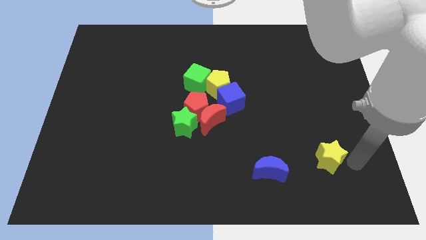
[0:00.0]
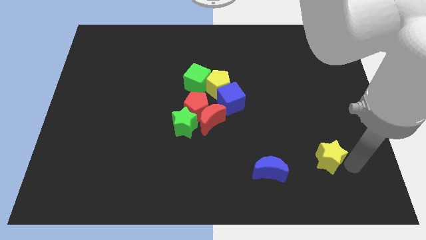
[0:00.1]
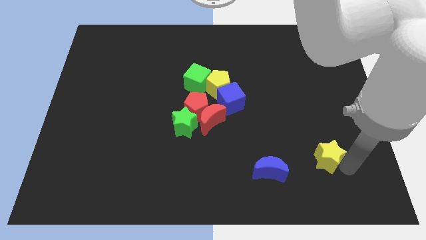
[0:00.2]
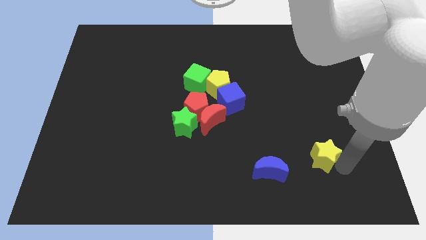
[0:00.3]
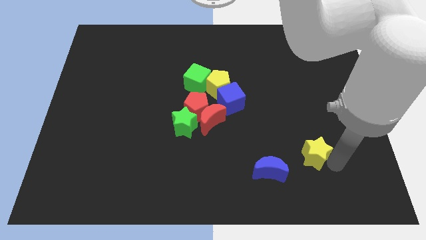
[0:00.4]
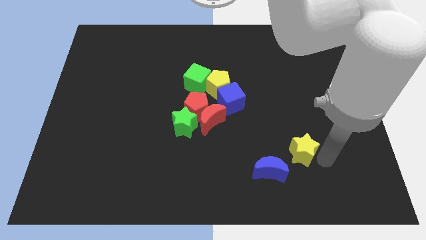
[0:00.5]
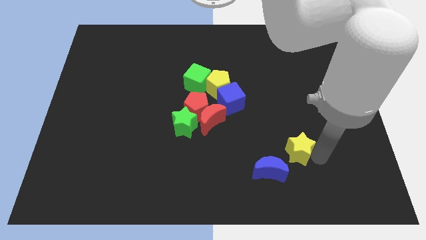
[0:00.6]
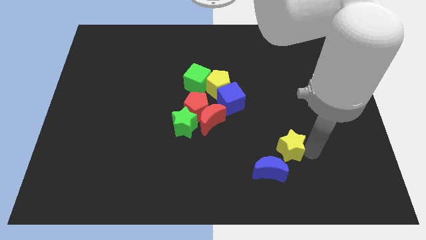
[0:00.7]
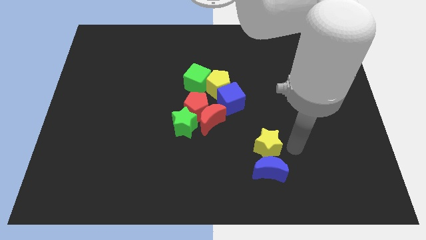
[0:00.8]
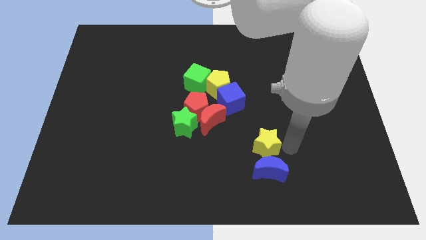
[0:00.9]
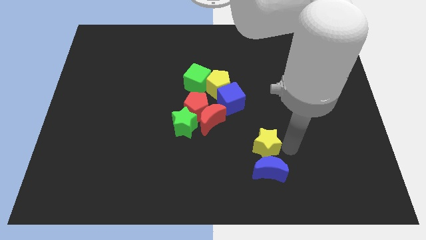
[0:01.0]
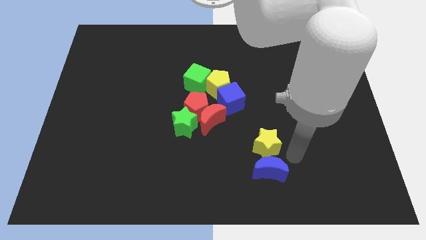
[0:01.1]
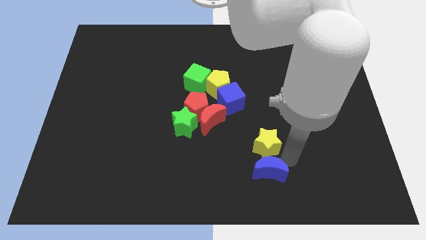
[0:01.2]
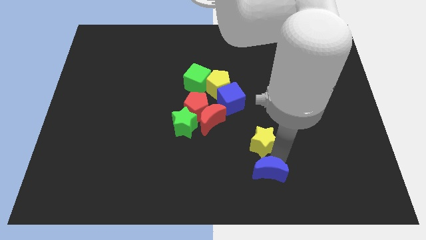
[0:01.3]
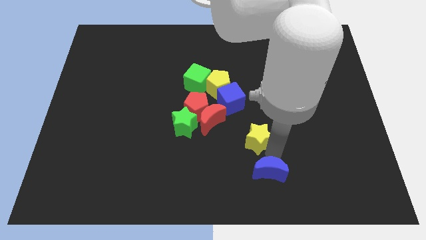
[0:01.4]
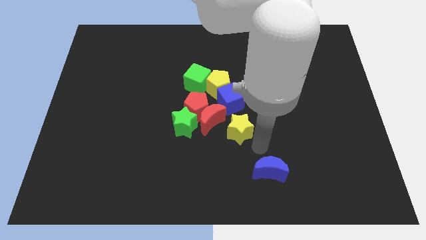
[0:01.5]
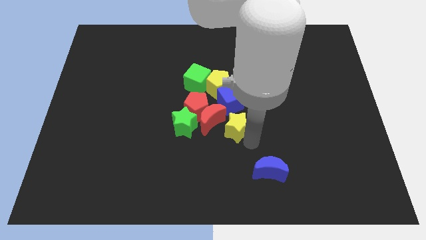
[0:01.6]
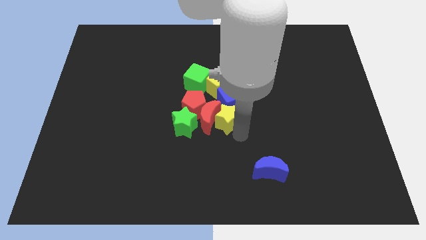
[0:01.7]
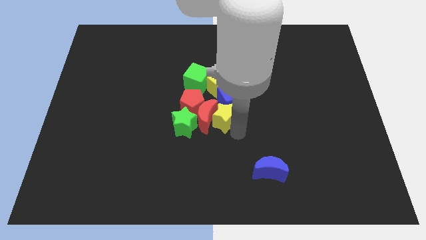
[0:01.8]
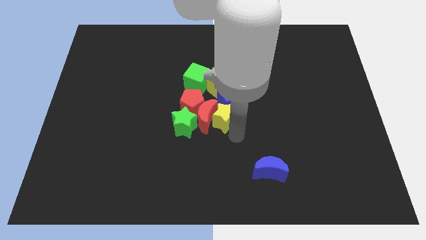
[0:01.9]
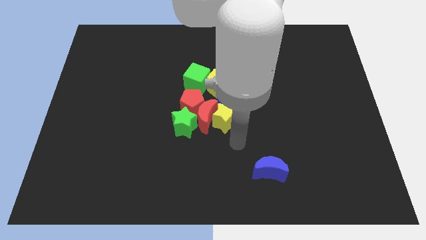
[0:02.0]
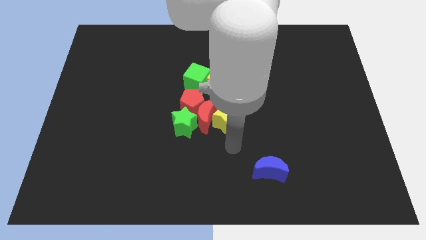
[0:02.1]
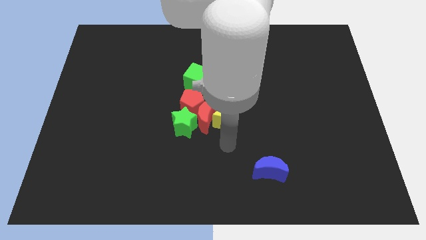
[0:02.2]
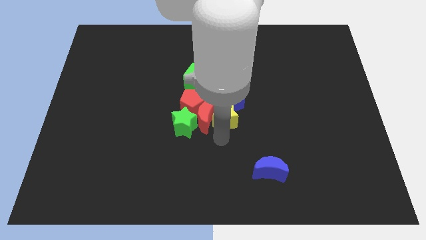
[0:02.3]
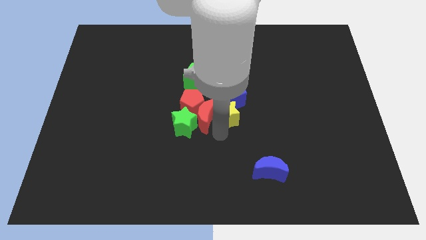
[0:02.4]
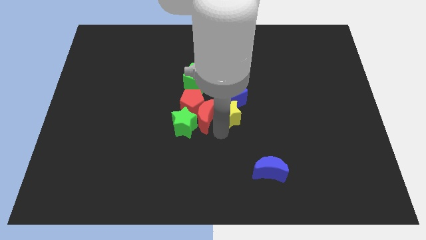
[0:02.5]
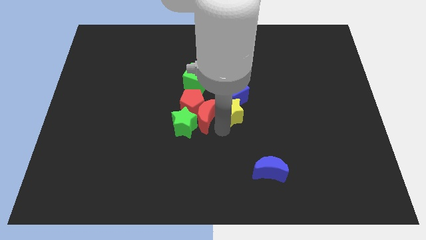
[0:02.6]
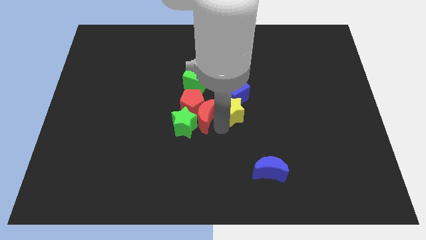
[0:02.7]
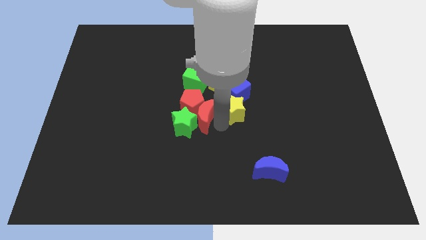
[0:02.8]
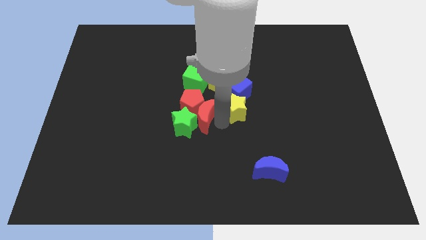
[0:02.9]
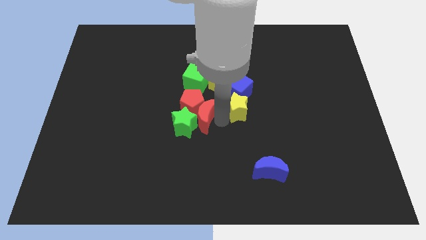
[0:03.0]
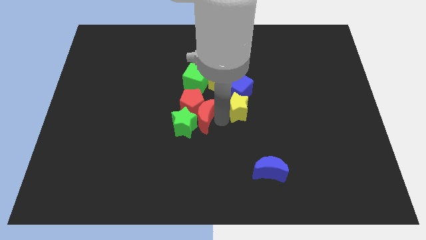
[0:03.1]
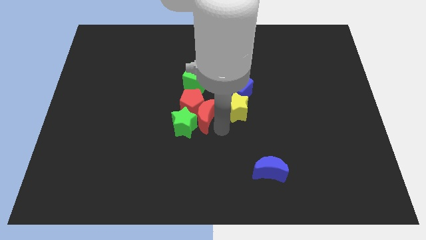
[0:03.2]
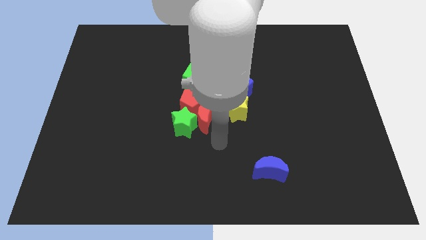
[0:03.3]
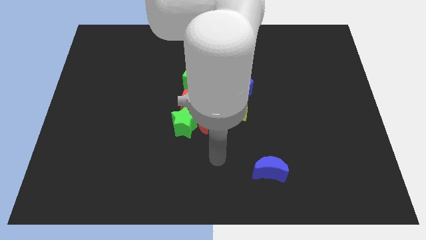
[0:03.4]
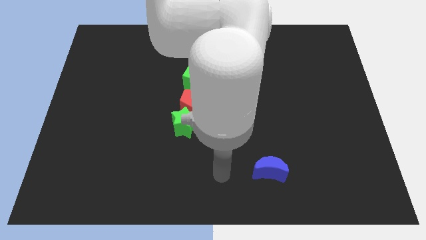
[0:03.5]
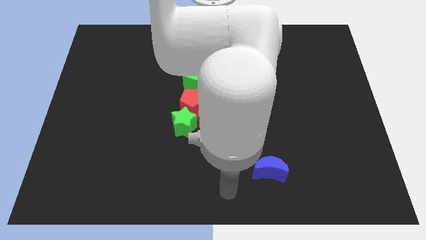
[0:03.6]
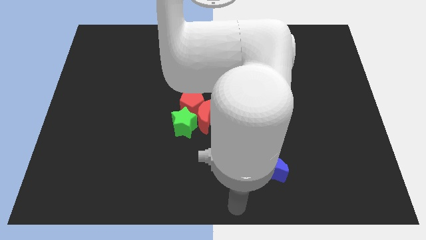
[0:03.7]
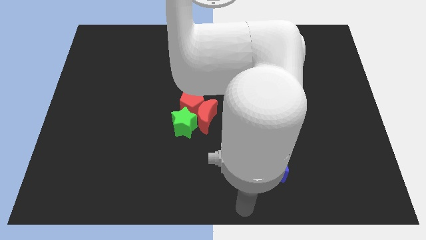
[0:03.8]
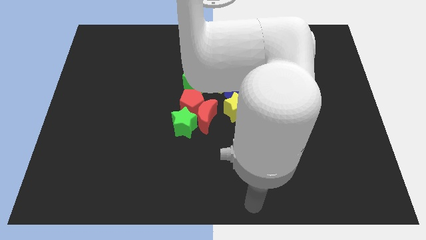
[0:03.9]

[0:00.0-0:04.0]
push the yellow star close to the blue cube at the center of the board

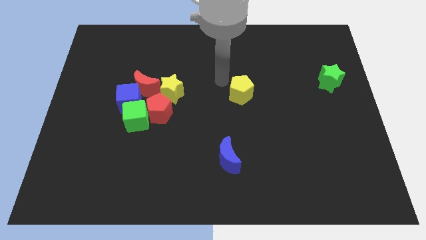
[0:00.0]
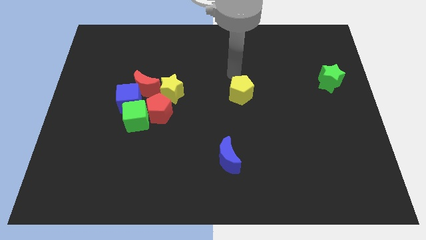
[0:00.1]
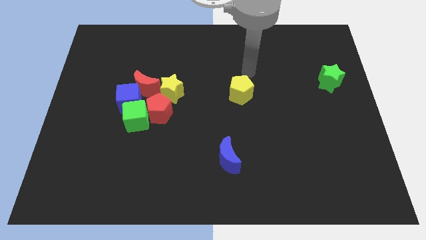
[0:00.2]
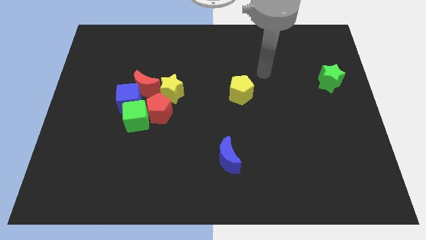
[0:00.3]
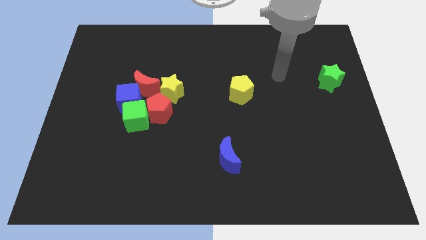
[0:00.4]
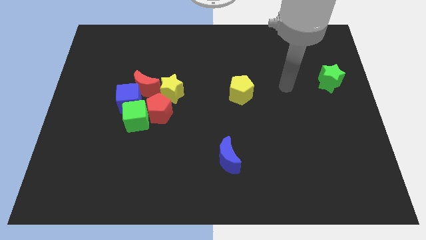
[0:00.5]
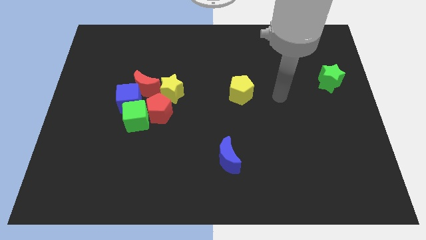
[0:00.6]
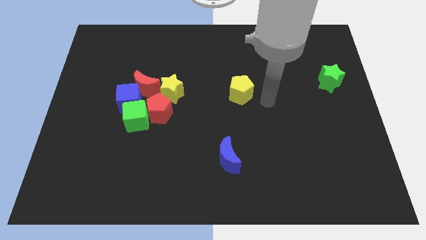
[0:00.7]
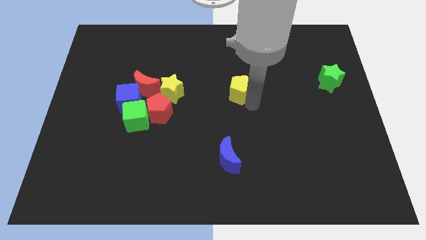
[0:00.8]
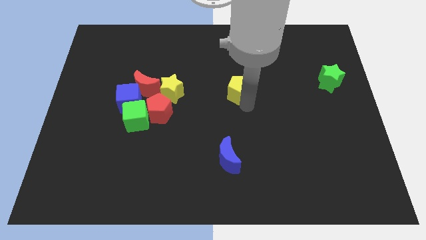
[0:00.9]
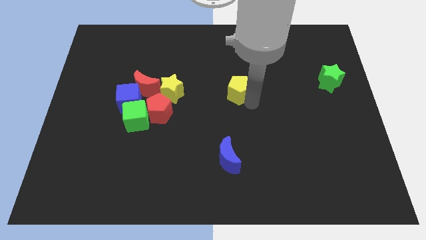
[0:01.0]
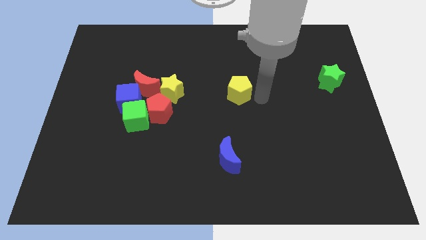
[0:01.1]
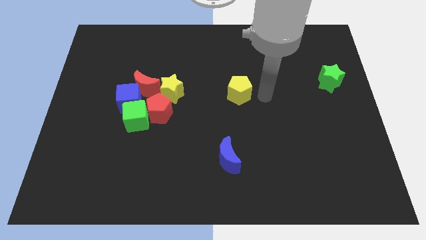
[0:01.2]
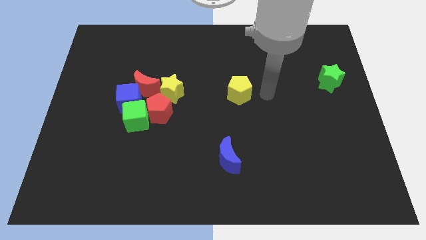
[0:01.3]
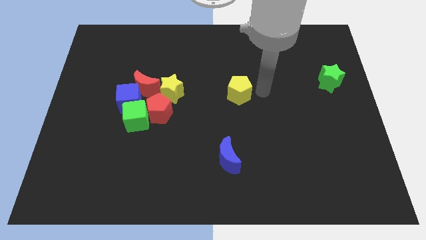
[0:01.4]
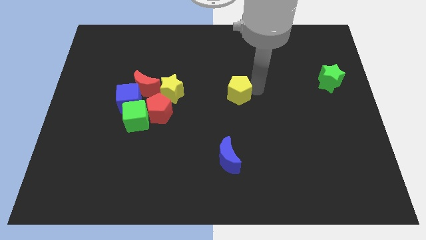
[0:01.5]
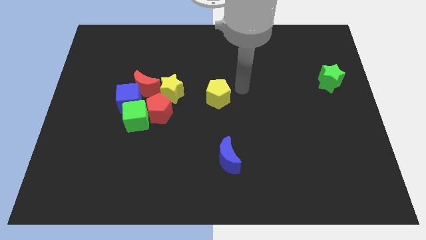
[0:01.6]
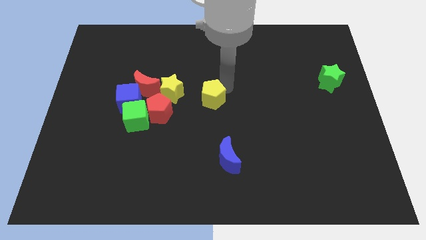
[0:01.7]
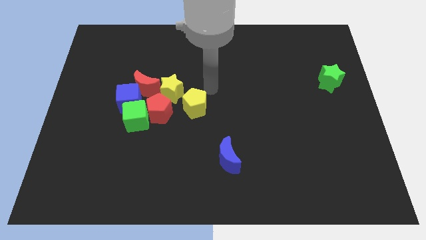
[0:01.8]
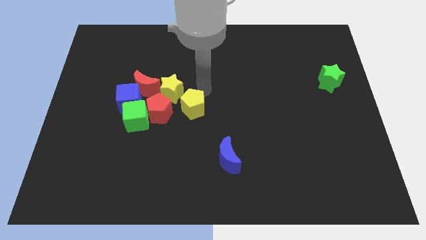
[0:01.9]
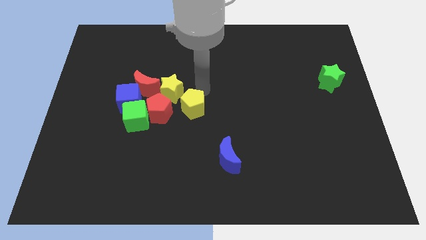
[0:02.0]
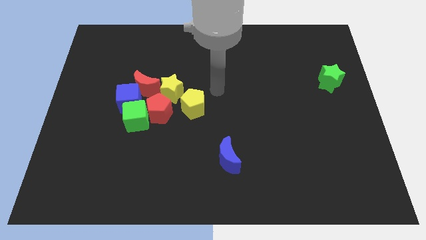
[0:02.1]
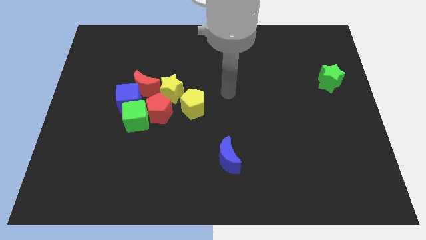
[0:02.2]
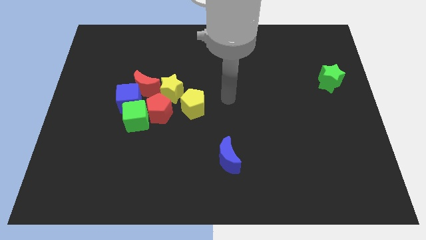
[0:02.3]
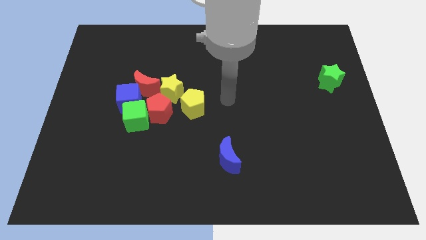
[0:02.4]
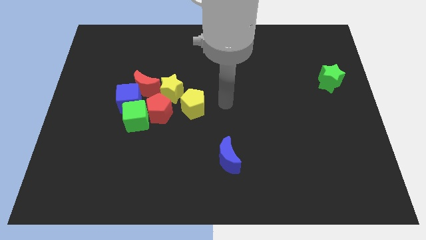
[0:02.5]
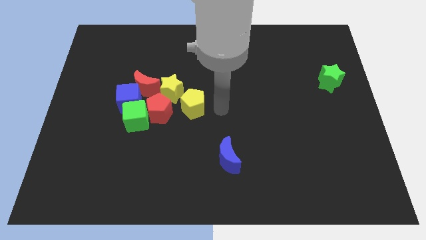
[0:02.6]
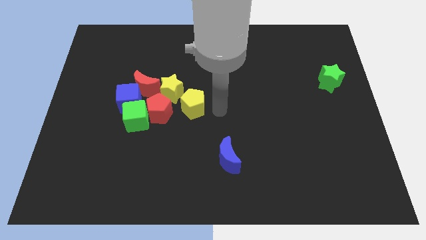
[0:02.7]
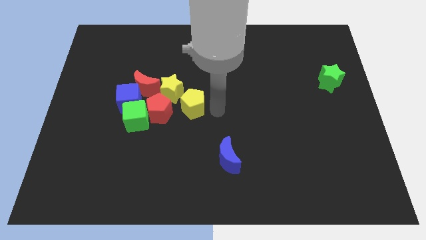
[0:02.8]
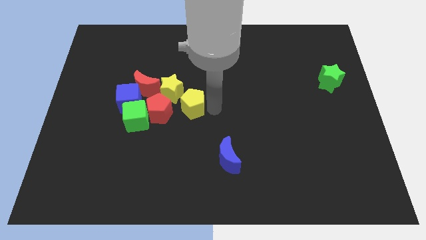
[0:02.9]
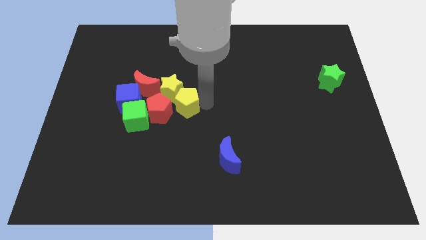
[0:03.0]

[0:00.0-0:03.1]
slide the yellow pentagon towards the bottom right of the yellow star

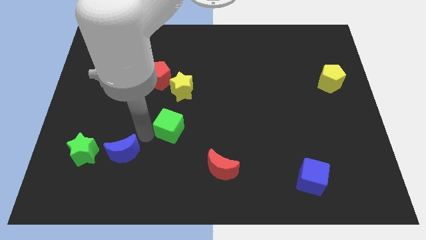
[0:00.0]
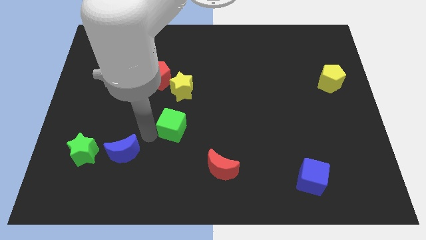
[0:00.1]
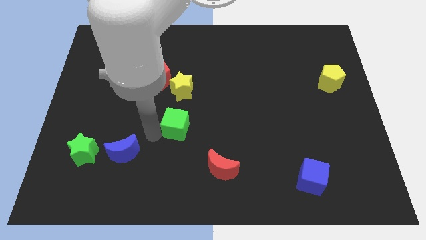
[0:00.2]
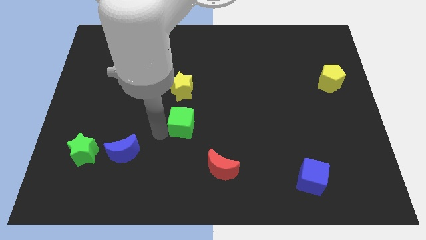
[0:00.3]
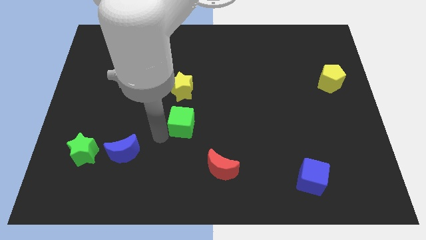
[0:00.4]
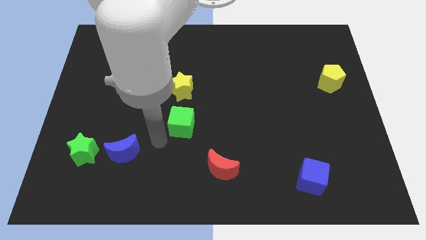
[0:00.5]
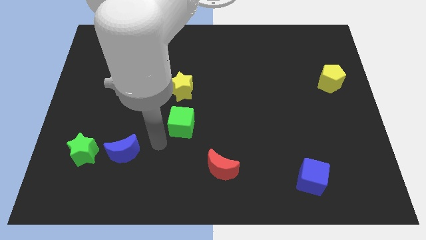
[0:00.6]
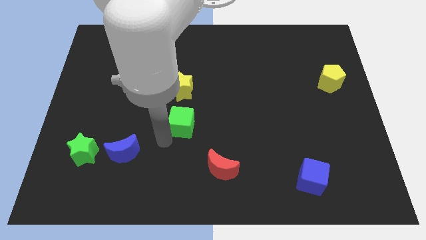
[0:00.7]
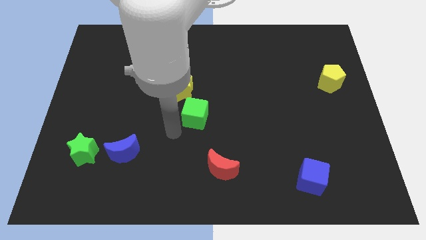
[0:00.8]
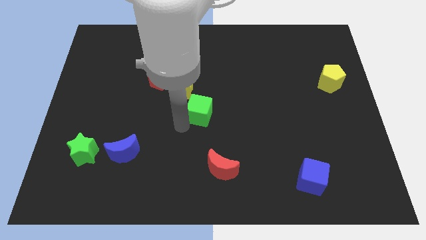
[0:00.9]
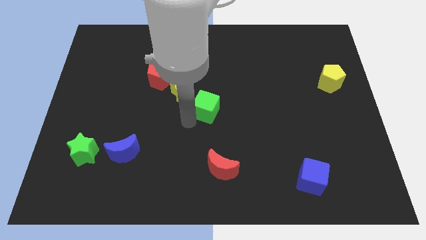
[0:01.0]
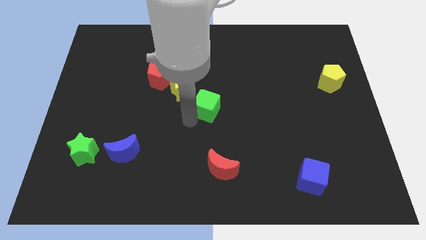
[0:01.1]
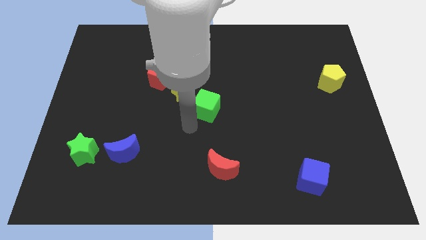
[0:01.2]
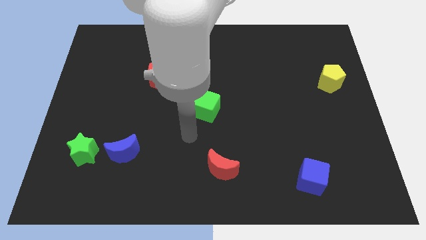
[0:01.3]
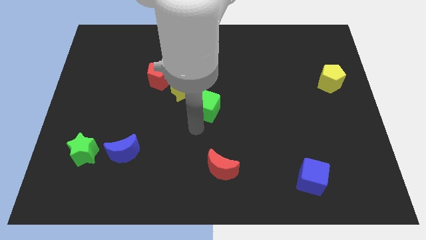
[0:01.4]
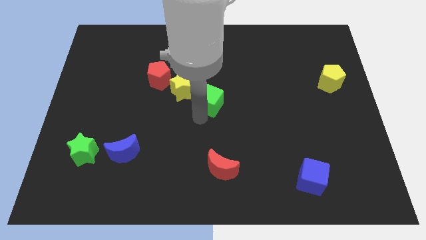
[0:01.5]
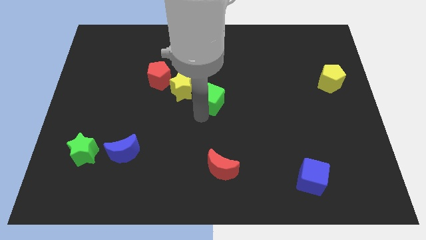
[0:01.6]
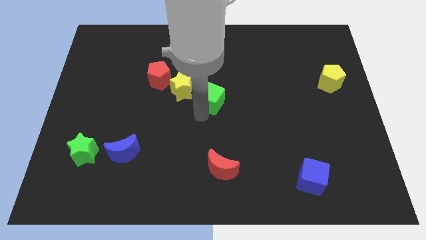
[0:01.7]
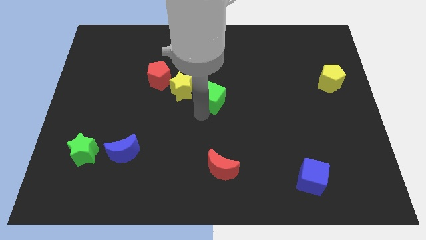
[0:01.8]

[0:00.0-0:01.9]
move green cube to center of the board
